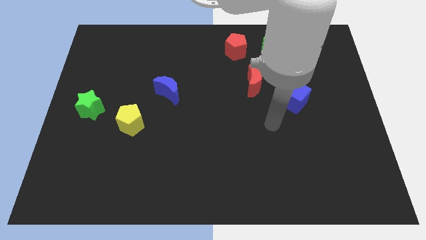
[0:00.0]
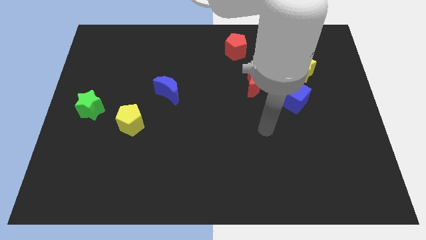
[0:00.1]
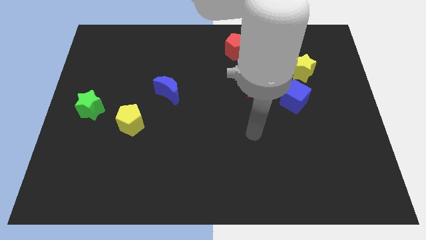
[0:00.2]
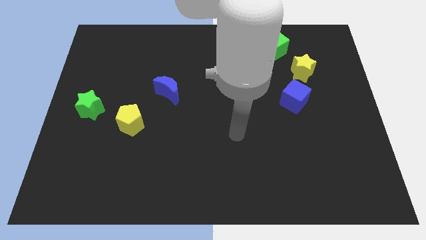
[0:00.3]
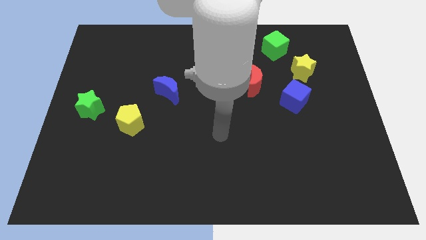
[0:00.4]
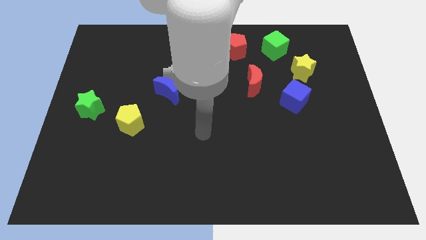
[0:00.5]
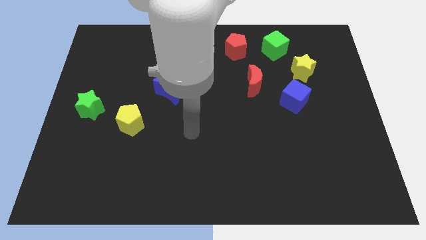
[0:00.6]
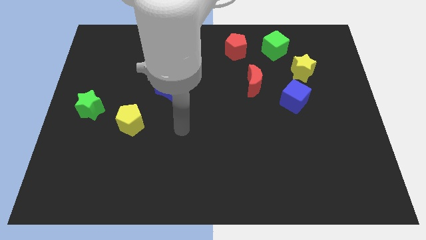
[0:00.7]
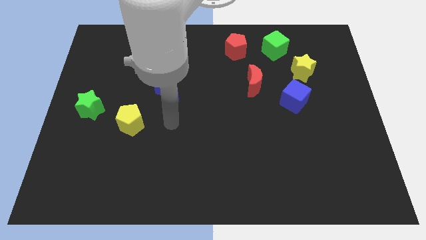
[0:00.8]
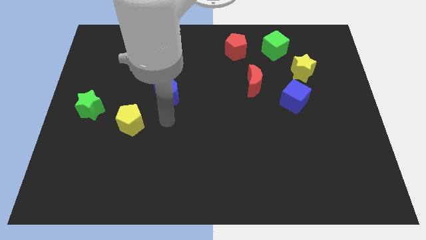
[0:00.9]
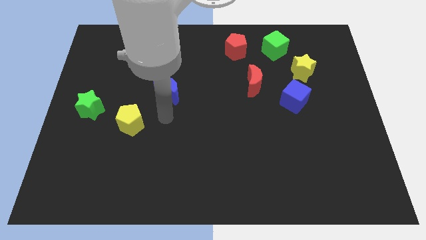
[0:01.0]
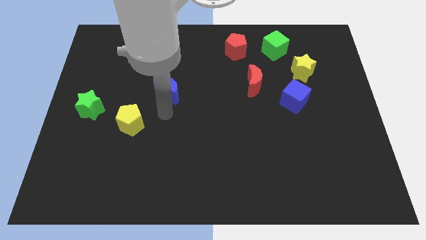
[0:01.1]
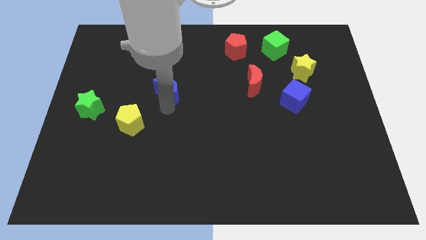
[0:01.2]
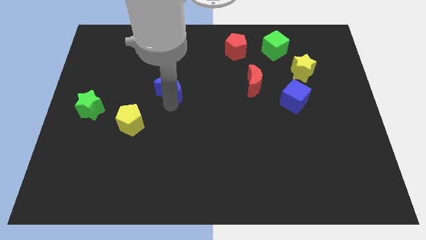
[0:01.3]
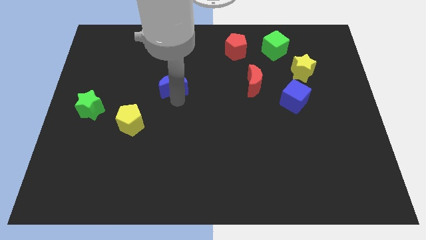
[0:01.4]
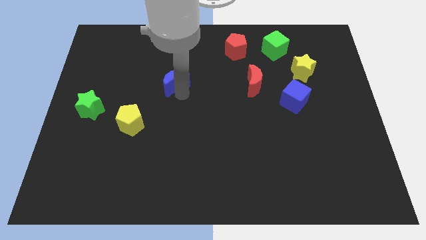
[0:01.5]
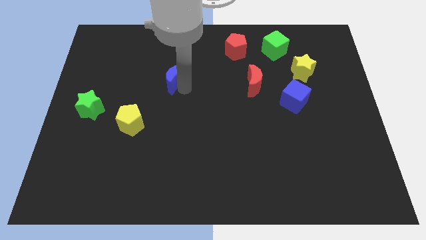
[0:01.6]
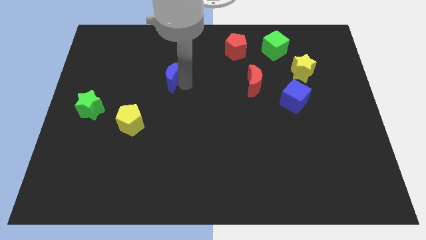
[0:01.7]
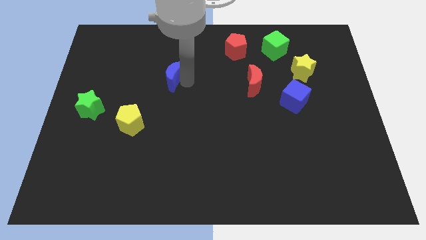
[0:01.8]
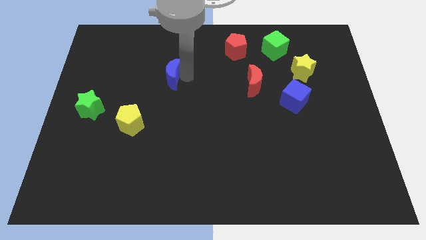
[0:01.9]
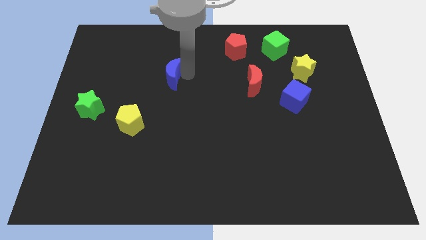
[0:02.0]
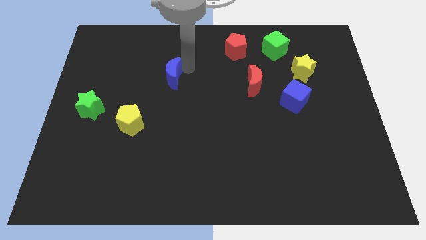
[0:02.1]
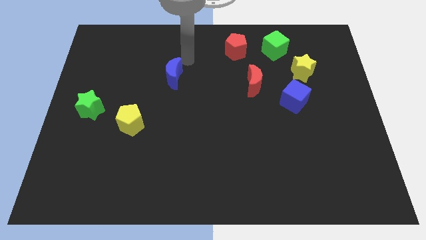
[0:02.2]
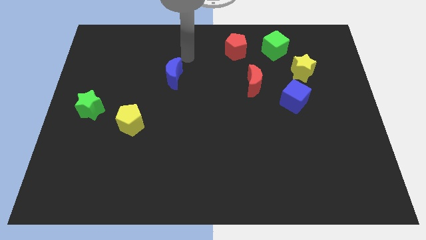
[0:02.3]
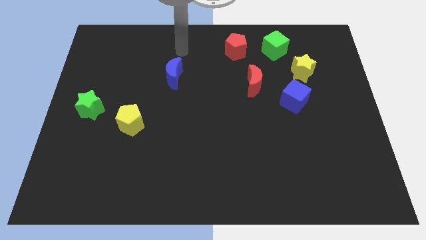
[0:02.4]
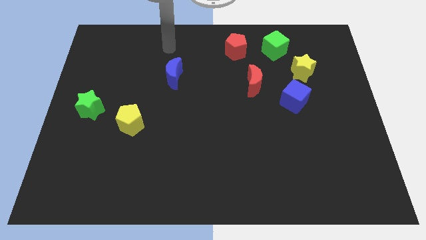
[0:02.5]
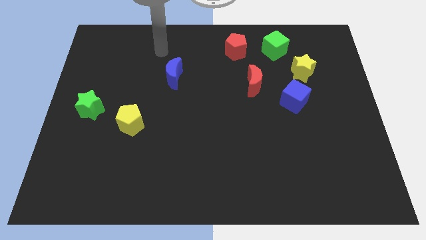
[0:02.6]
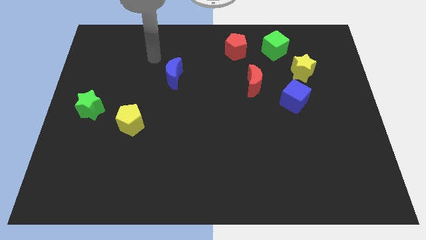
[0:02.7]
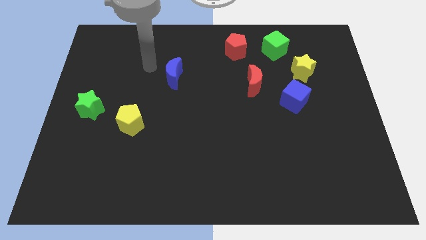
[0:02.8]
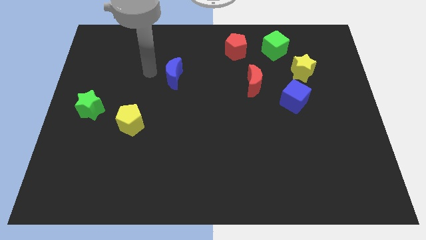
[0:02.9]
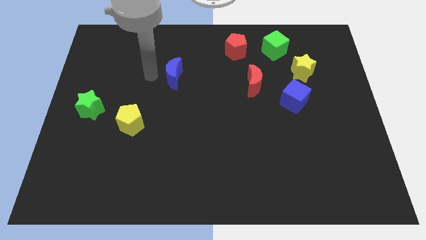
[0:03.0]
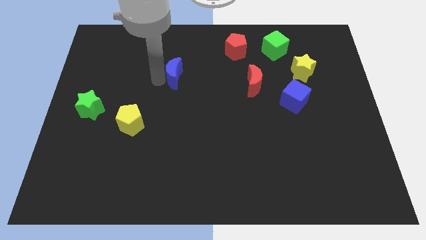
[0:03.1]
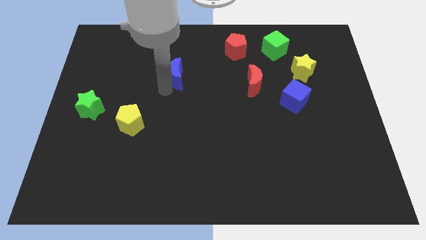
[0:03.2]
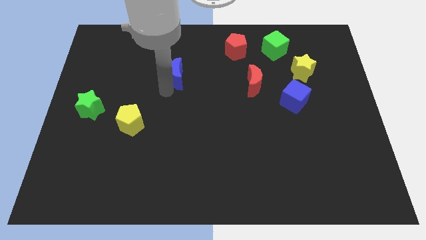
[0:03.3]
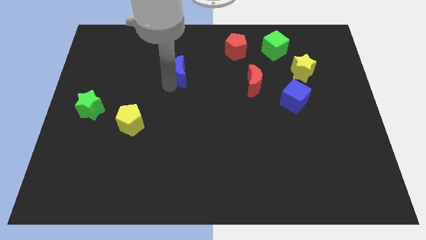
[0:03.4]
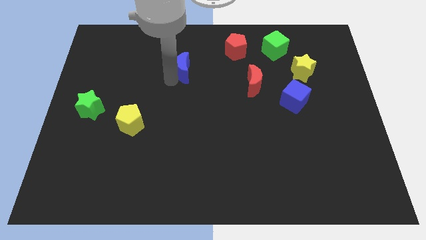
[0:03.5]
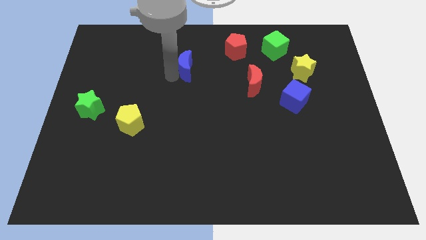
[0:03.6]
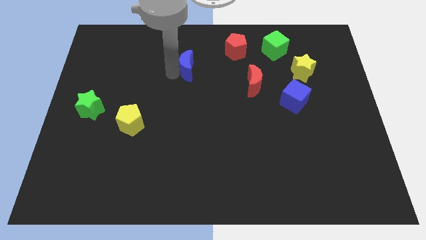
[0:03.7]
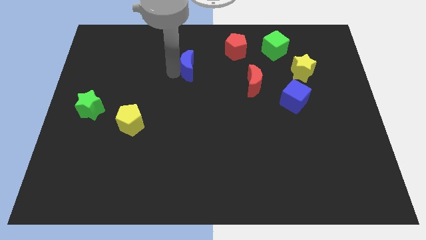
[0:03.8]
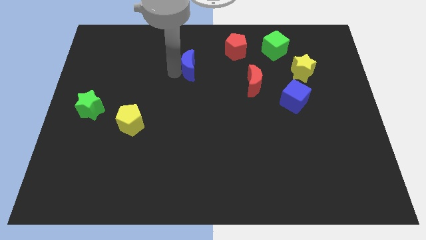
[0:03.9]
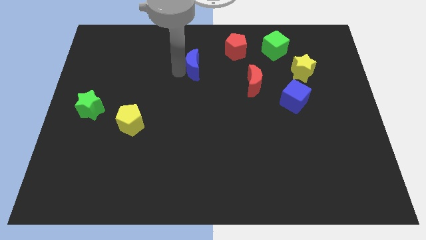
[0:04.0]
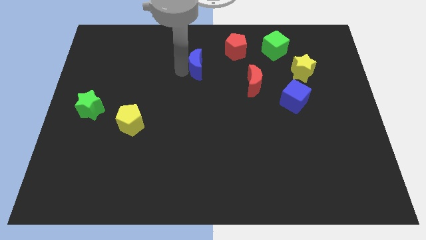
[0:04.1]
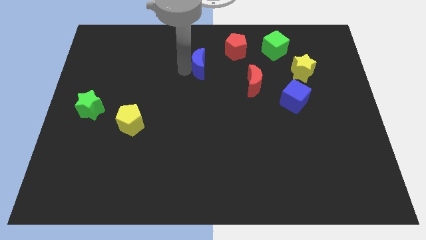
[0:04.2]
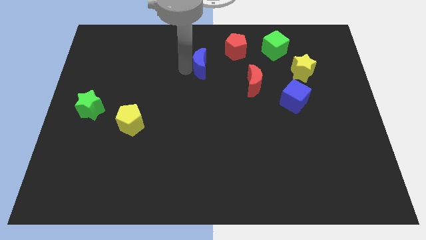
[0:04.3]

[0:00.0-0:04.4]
move the blue crescent to the bottom left of the red pentagon

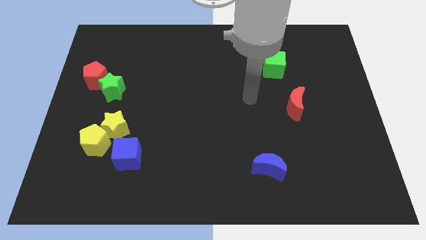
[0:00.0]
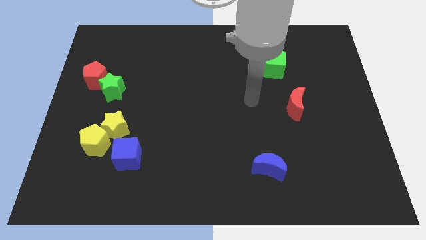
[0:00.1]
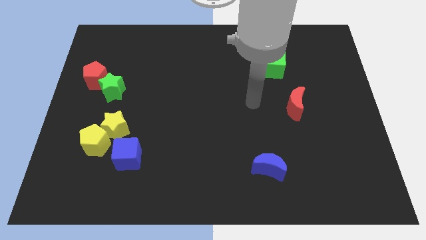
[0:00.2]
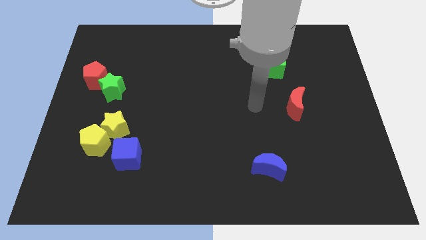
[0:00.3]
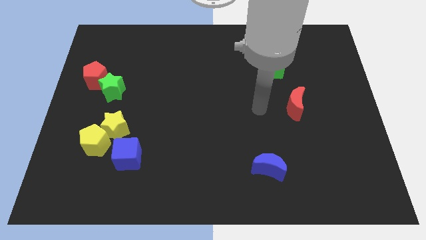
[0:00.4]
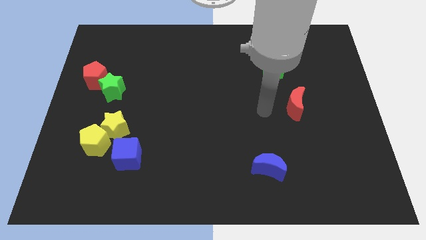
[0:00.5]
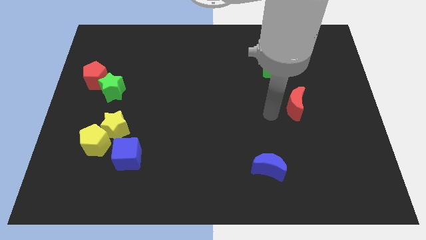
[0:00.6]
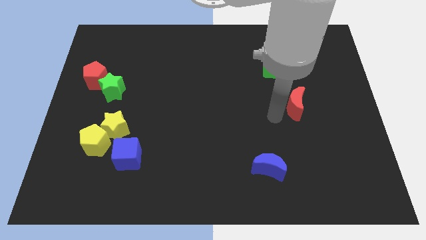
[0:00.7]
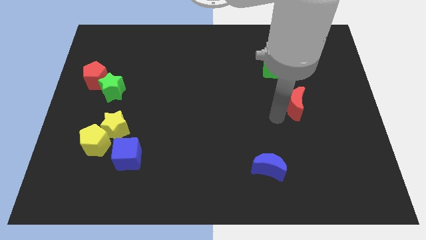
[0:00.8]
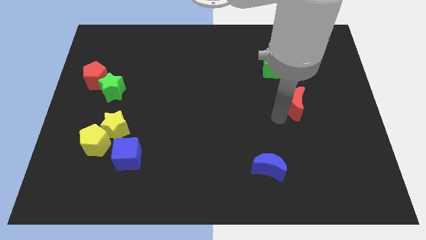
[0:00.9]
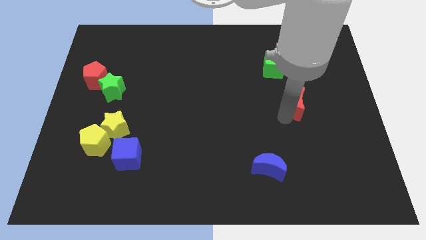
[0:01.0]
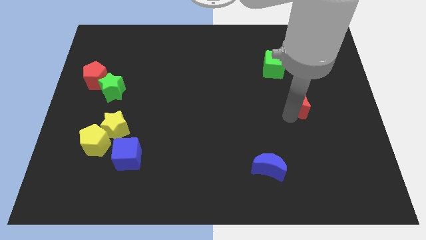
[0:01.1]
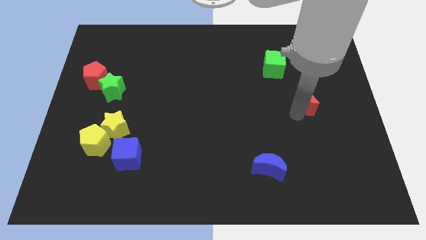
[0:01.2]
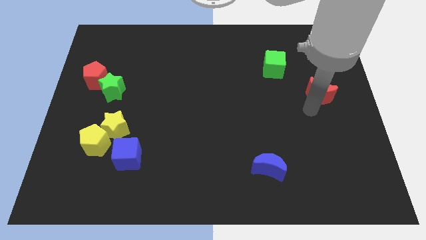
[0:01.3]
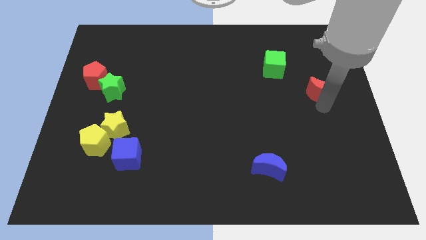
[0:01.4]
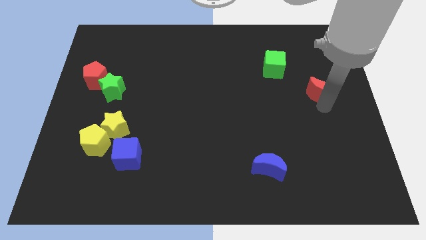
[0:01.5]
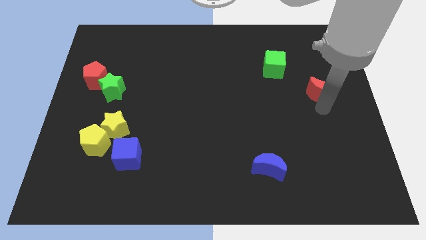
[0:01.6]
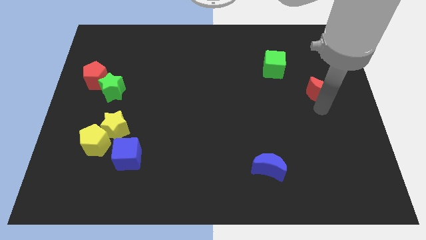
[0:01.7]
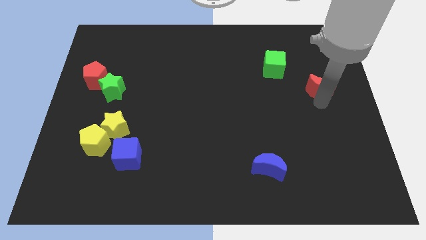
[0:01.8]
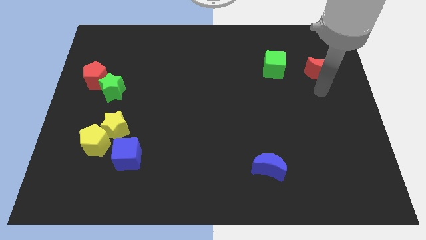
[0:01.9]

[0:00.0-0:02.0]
move the red crescent close to the green cube

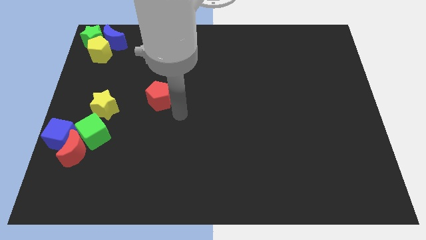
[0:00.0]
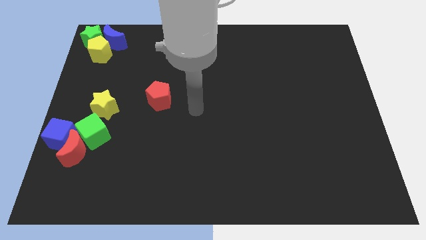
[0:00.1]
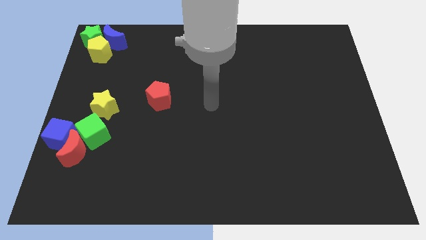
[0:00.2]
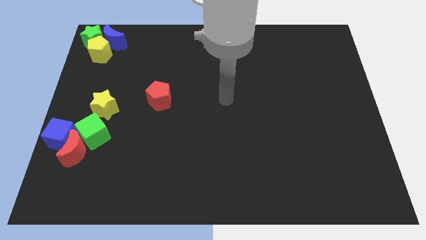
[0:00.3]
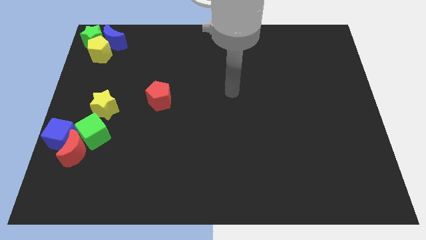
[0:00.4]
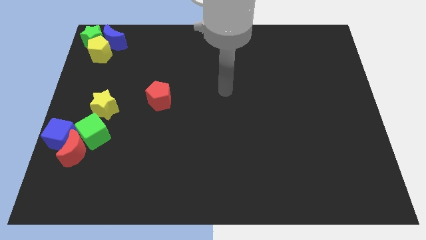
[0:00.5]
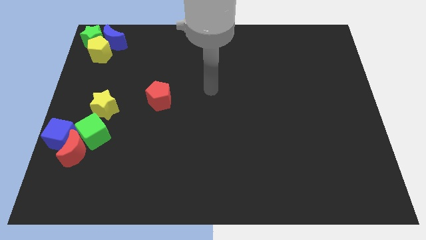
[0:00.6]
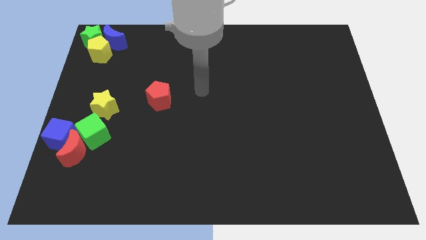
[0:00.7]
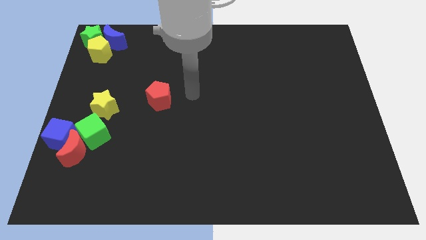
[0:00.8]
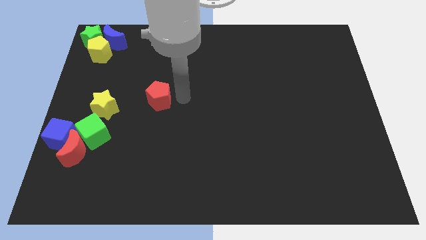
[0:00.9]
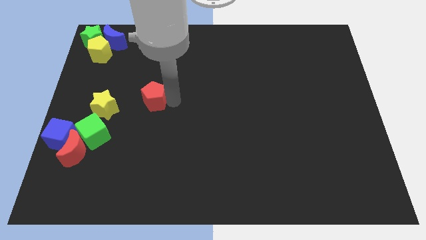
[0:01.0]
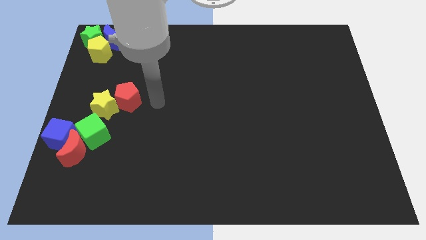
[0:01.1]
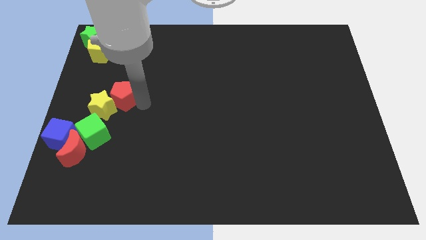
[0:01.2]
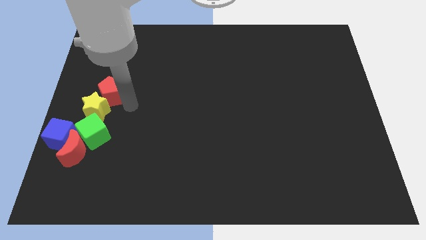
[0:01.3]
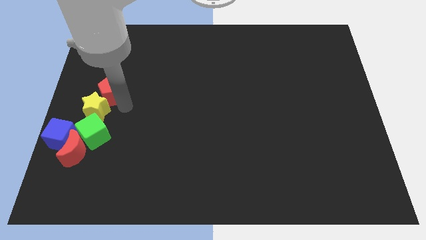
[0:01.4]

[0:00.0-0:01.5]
push the red pentagon into the yellow star

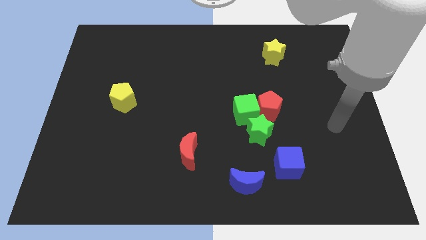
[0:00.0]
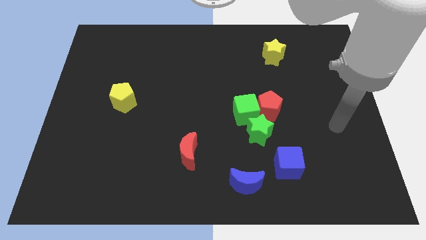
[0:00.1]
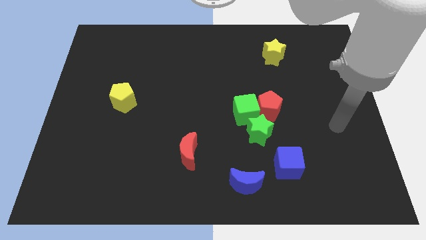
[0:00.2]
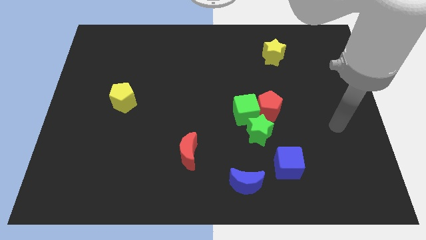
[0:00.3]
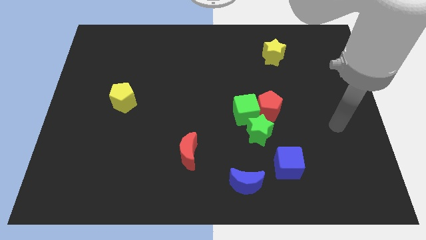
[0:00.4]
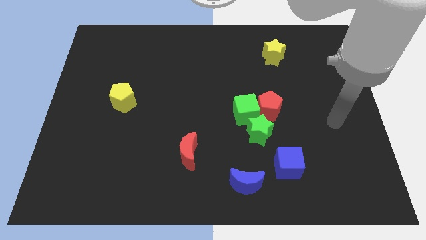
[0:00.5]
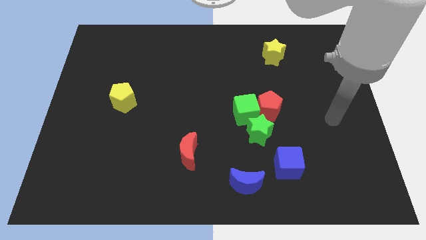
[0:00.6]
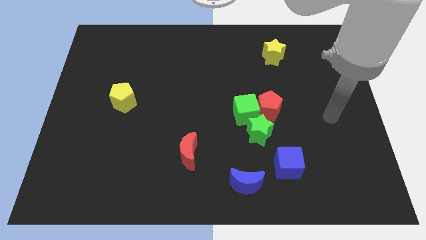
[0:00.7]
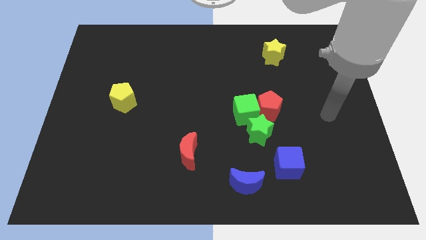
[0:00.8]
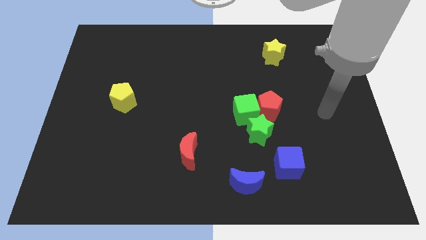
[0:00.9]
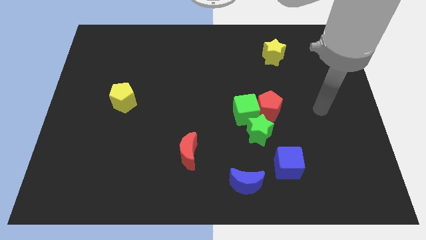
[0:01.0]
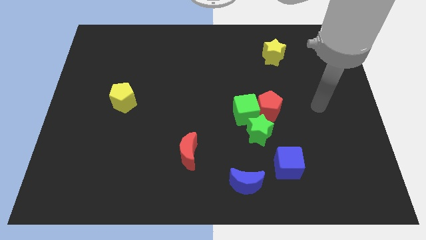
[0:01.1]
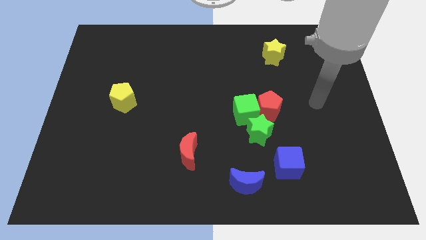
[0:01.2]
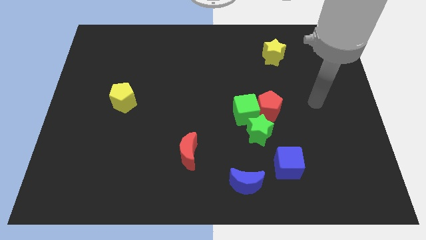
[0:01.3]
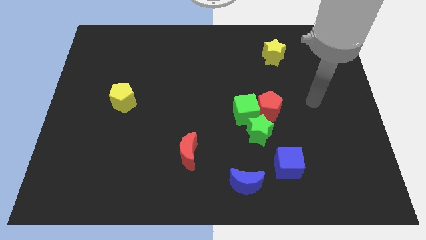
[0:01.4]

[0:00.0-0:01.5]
move your arm to the right of the red pentagon
